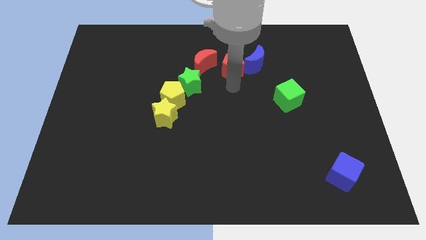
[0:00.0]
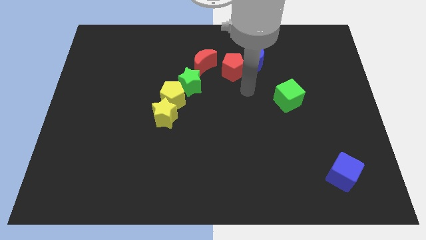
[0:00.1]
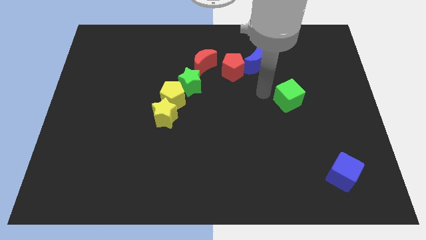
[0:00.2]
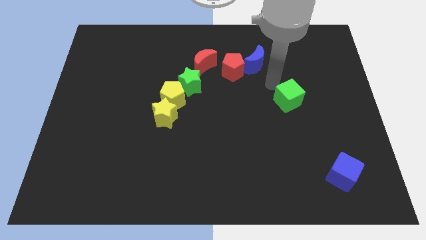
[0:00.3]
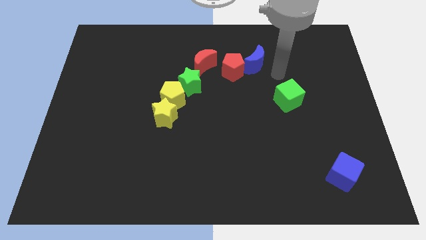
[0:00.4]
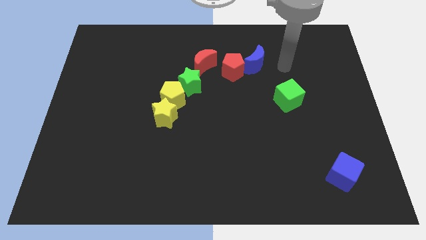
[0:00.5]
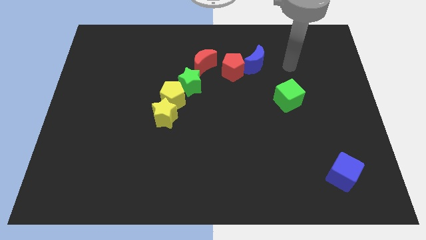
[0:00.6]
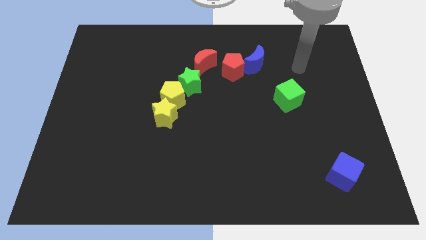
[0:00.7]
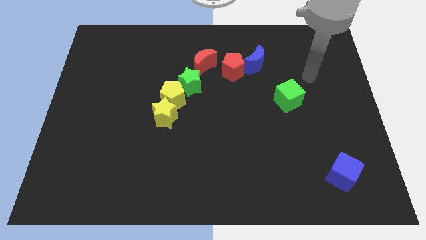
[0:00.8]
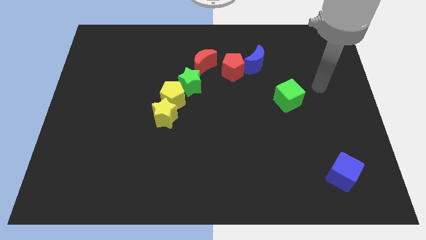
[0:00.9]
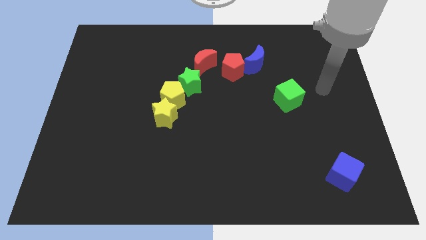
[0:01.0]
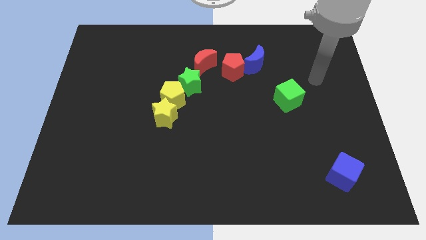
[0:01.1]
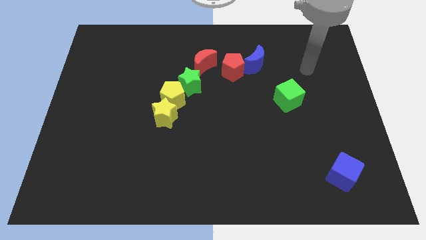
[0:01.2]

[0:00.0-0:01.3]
place arm to the top right of green cube

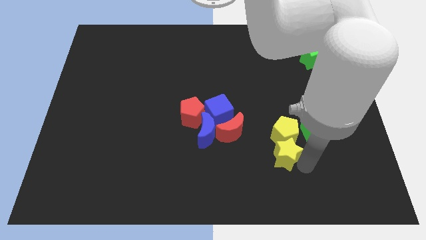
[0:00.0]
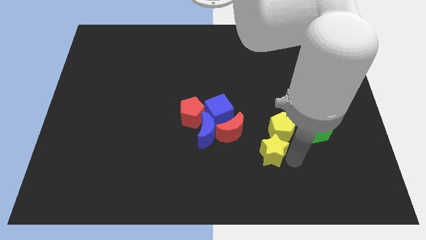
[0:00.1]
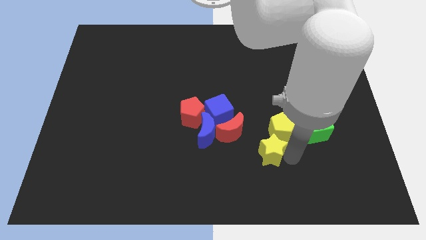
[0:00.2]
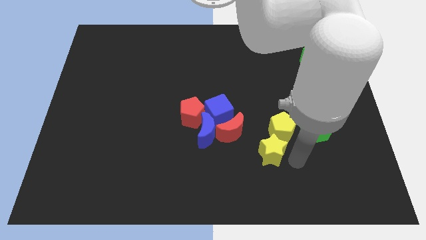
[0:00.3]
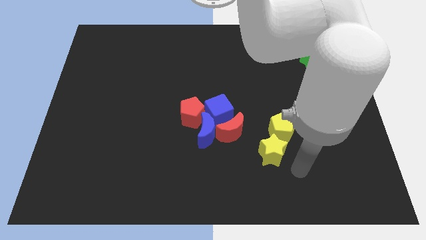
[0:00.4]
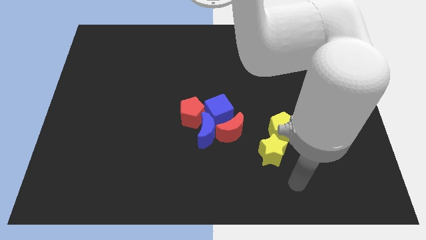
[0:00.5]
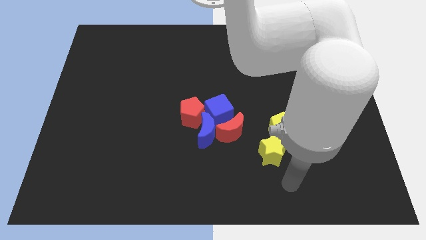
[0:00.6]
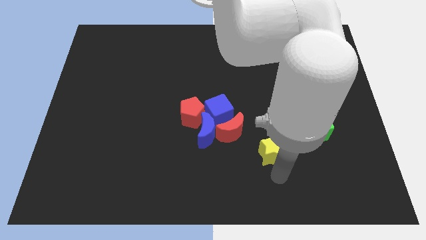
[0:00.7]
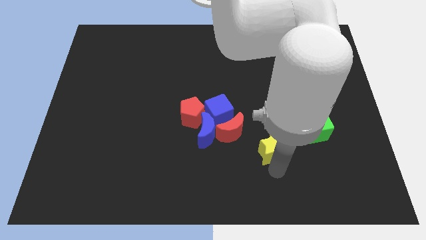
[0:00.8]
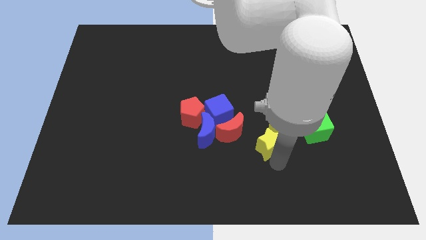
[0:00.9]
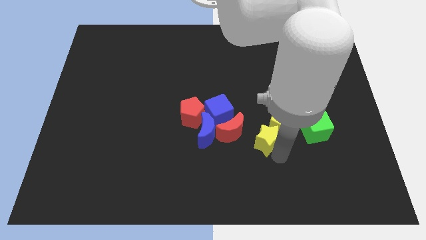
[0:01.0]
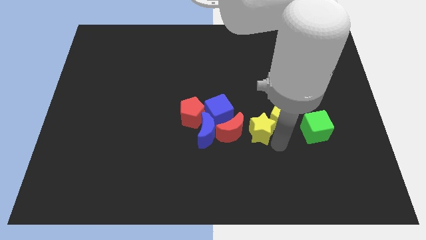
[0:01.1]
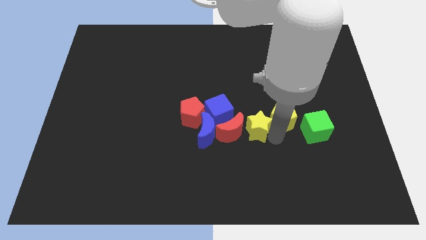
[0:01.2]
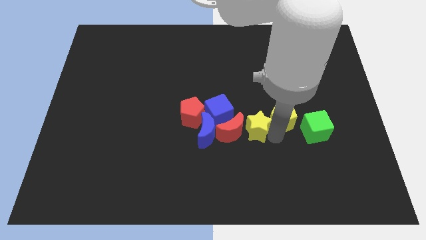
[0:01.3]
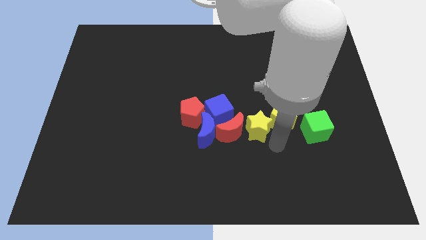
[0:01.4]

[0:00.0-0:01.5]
place yellow star to the right of the red moon

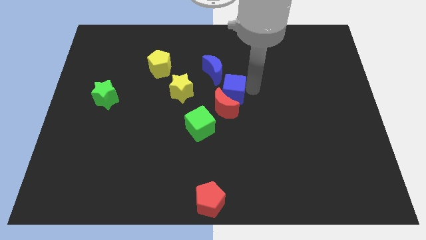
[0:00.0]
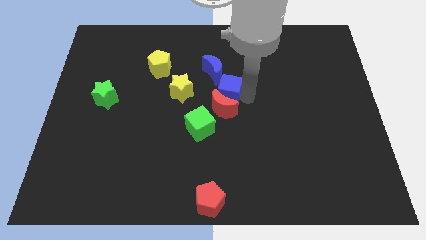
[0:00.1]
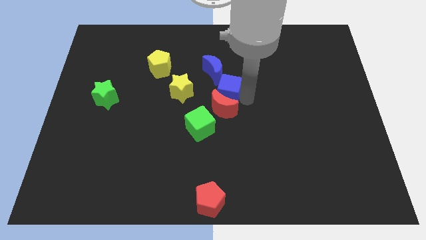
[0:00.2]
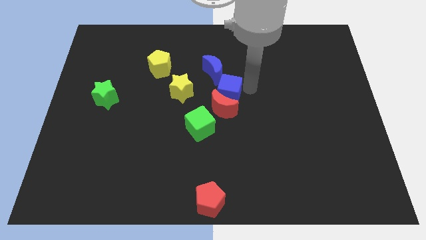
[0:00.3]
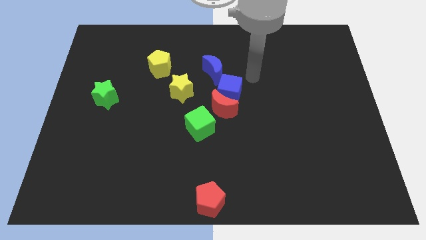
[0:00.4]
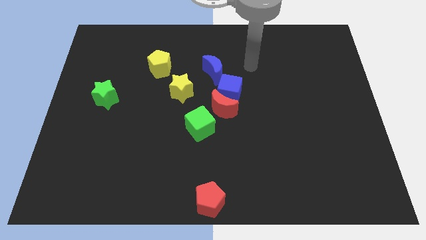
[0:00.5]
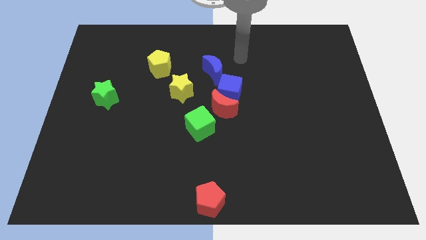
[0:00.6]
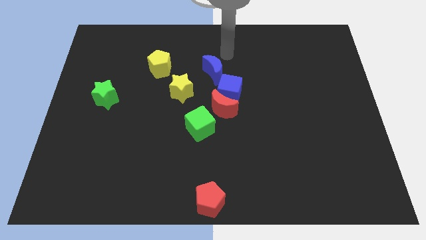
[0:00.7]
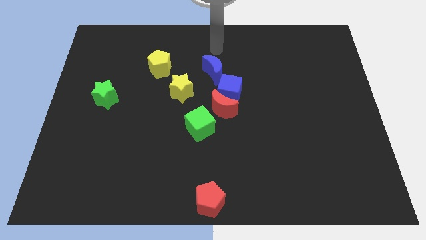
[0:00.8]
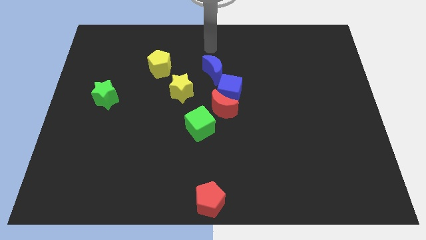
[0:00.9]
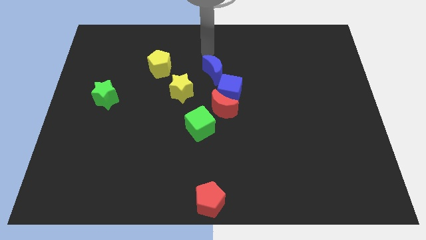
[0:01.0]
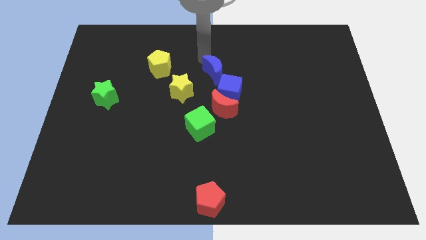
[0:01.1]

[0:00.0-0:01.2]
move arm to the top of the blue crescent

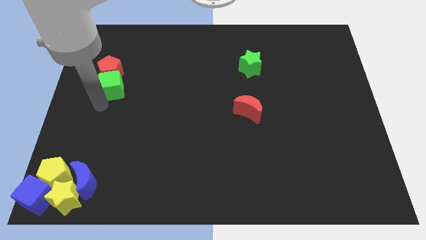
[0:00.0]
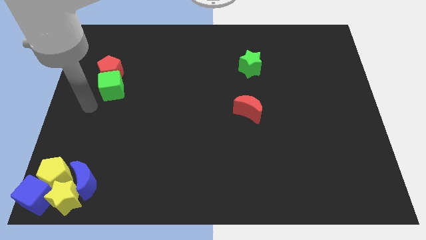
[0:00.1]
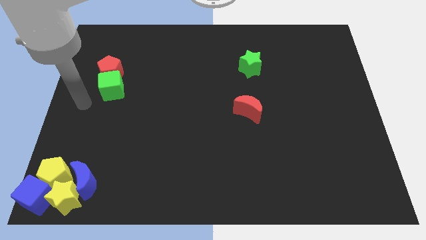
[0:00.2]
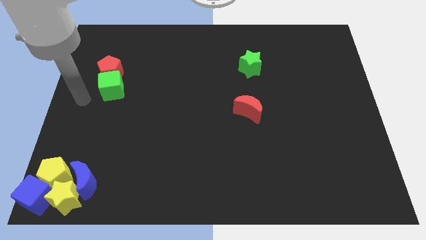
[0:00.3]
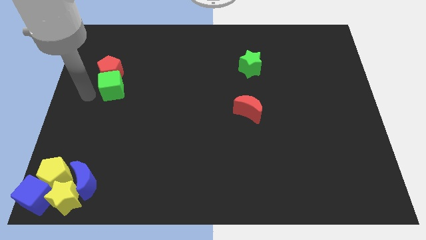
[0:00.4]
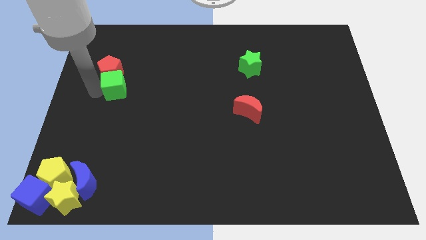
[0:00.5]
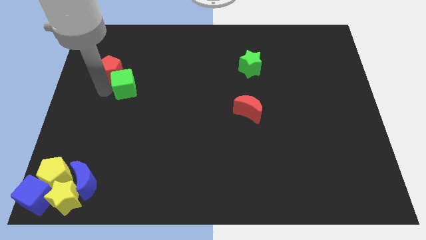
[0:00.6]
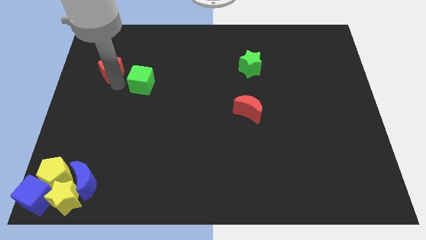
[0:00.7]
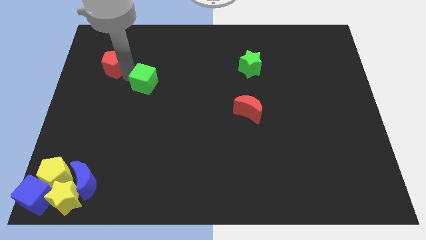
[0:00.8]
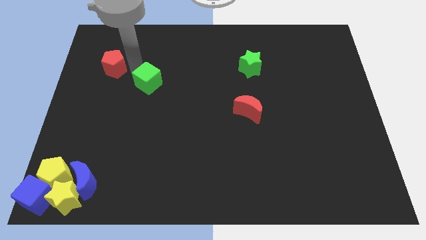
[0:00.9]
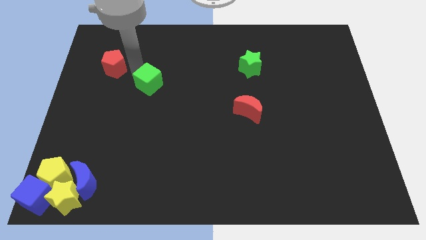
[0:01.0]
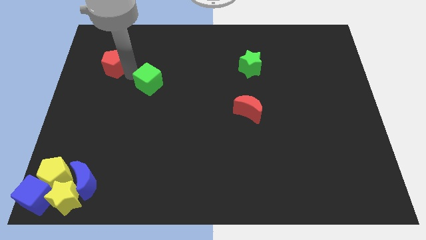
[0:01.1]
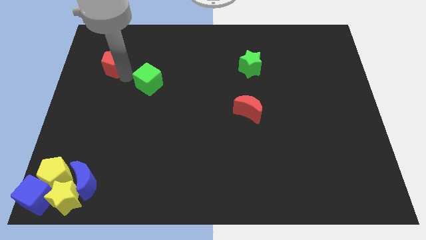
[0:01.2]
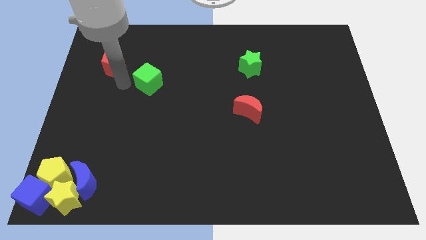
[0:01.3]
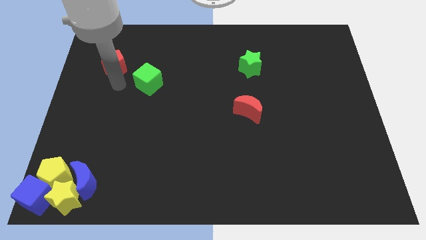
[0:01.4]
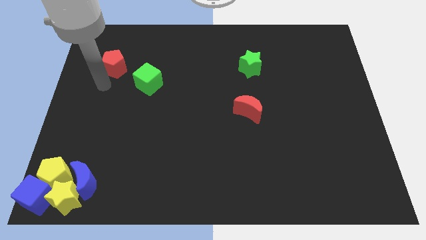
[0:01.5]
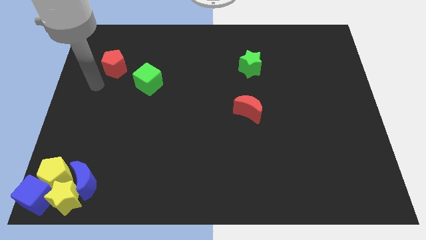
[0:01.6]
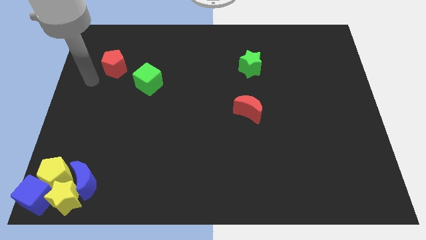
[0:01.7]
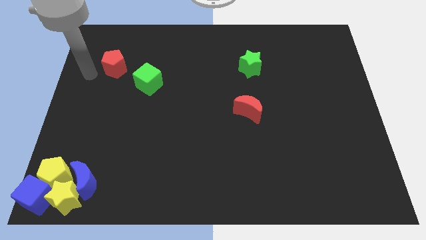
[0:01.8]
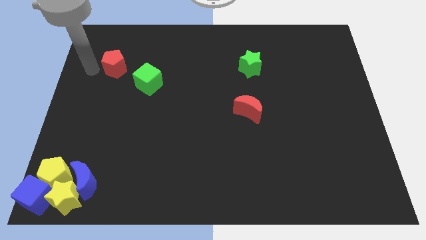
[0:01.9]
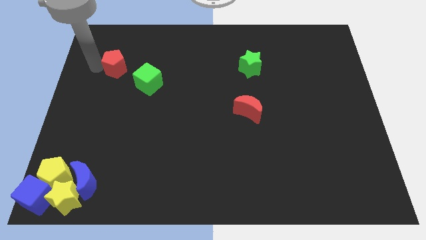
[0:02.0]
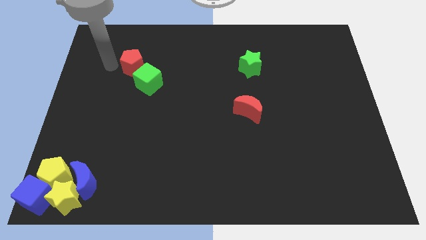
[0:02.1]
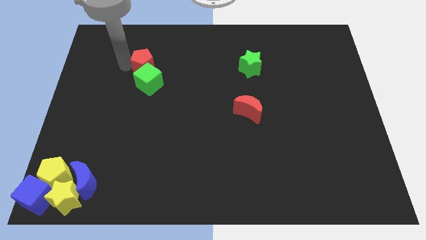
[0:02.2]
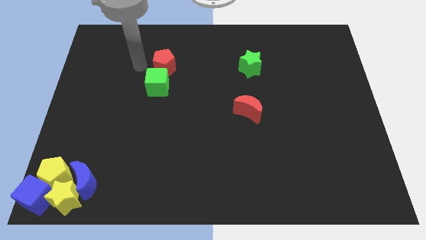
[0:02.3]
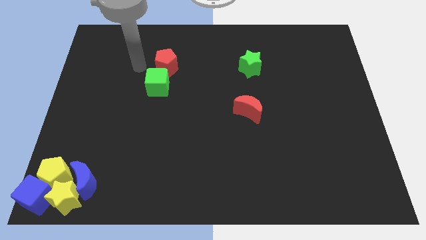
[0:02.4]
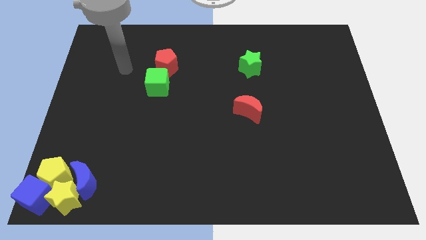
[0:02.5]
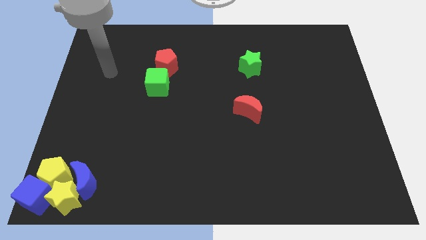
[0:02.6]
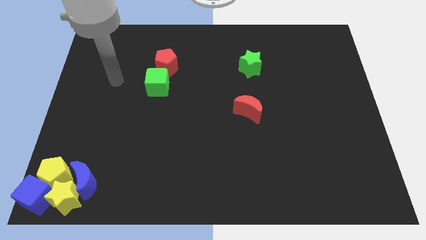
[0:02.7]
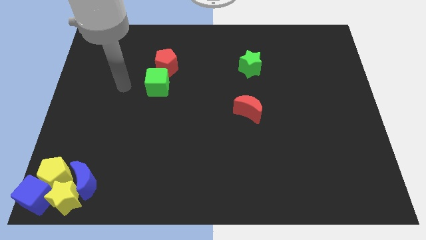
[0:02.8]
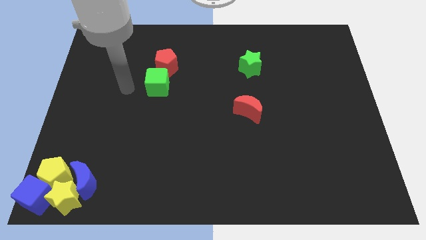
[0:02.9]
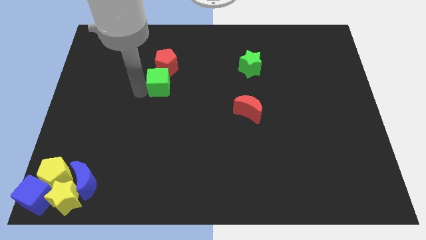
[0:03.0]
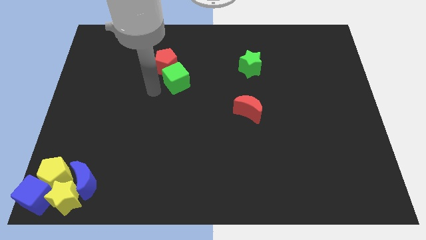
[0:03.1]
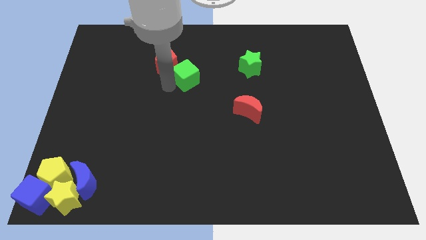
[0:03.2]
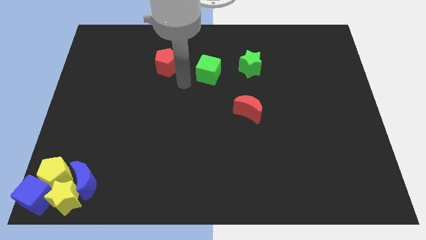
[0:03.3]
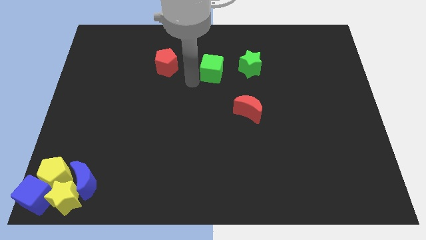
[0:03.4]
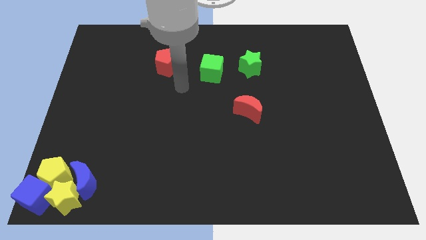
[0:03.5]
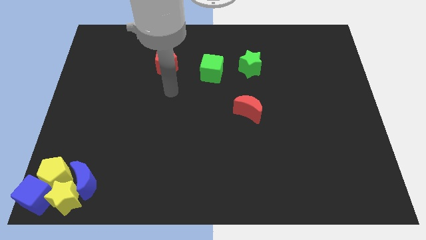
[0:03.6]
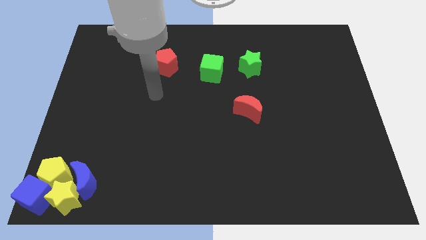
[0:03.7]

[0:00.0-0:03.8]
separate the green cube from the red pentagon

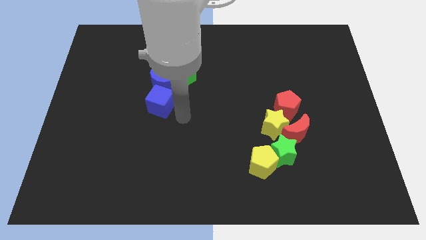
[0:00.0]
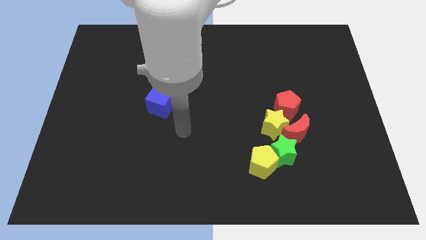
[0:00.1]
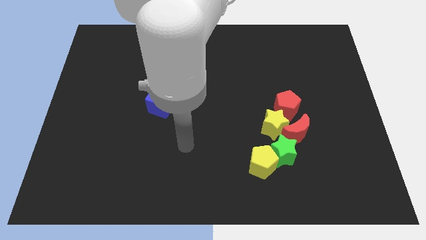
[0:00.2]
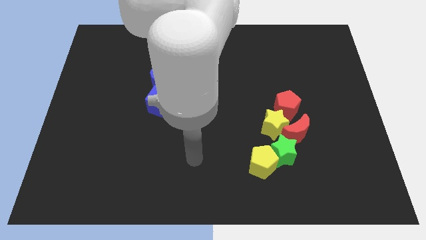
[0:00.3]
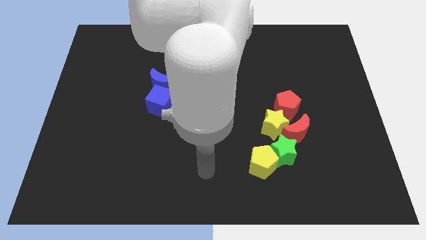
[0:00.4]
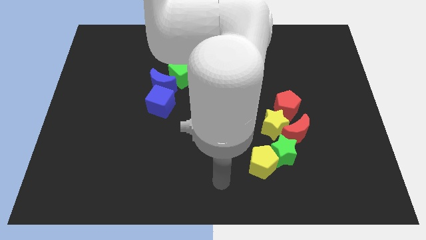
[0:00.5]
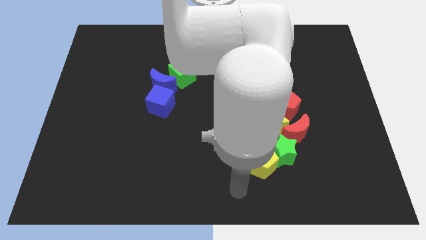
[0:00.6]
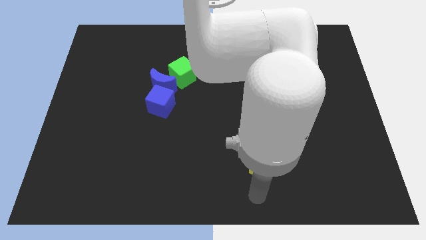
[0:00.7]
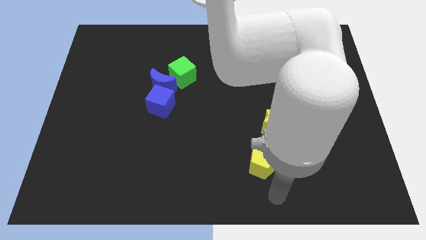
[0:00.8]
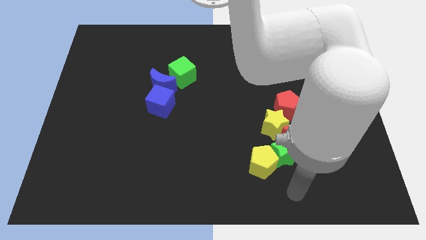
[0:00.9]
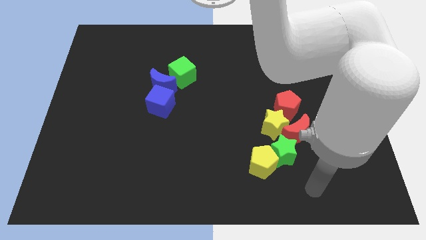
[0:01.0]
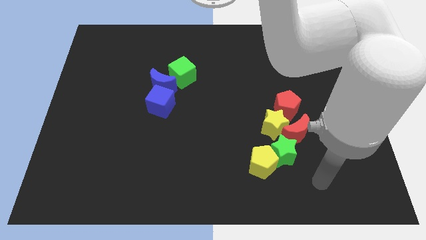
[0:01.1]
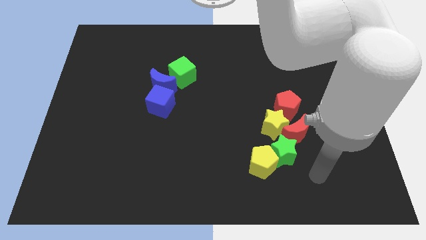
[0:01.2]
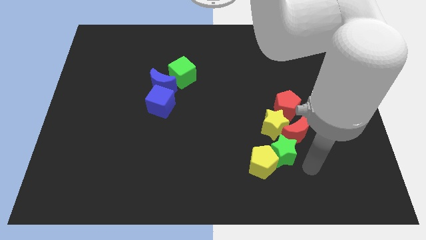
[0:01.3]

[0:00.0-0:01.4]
move your arm away from the blue cube
